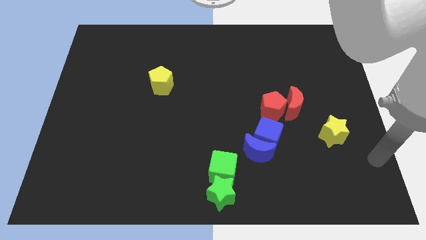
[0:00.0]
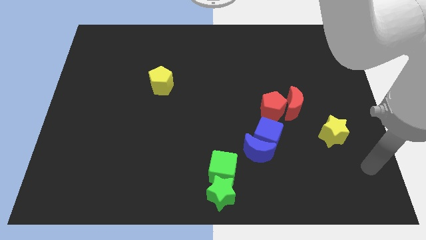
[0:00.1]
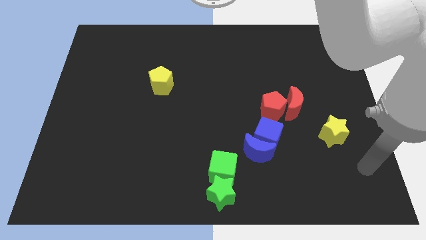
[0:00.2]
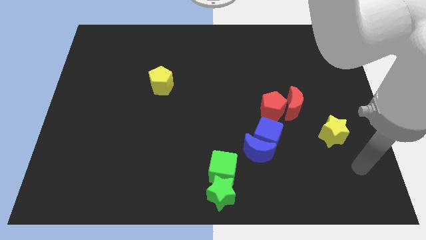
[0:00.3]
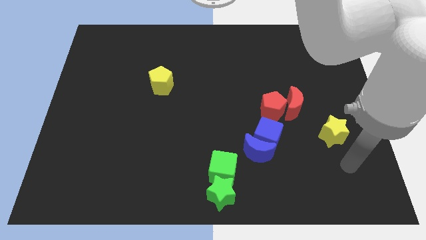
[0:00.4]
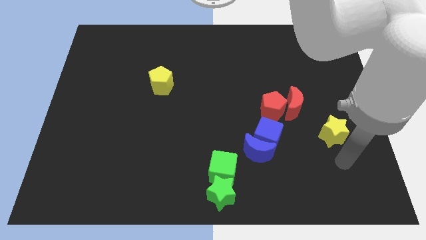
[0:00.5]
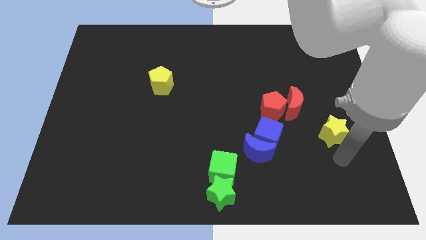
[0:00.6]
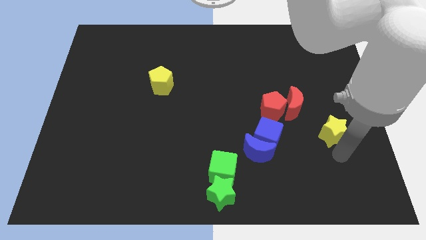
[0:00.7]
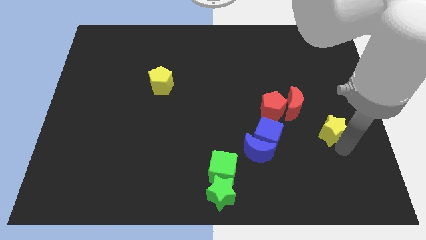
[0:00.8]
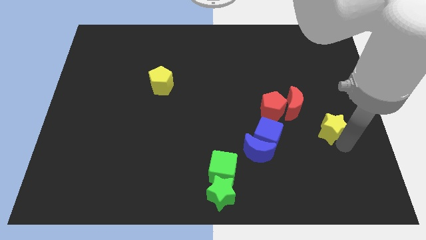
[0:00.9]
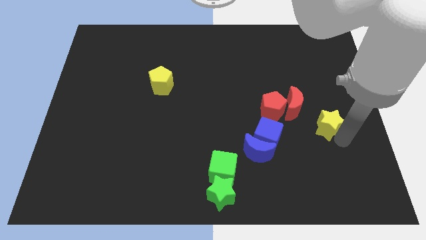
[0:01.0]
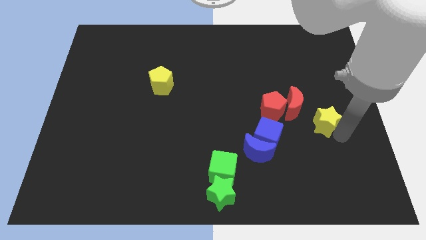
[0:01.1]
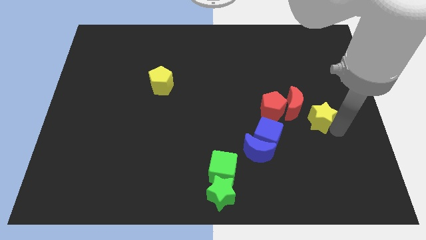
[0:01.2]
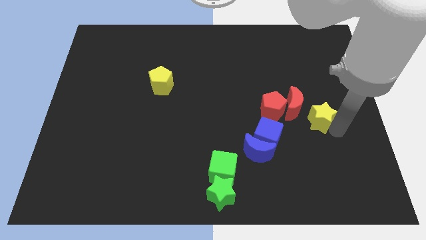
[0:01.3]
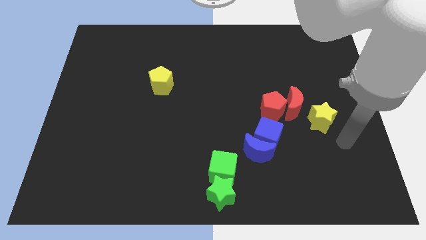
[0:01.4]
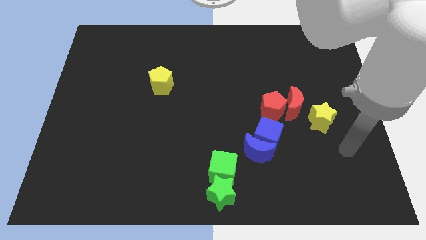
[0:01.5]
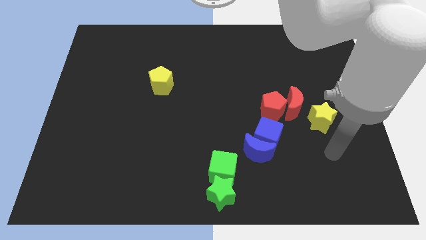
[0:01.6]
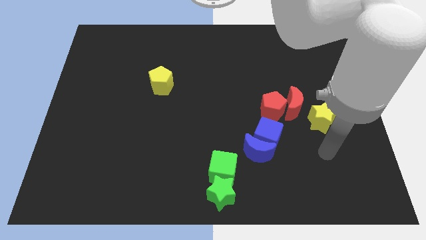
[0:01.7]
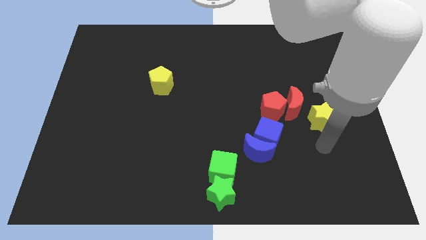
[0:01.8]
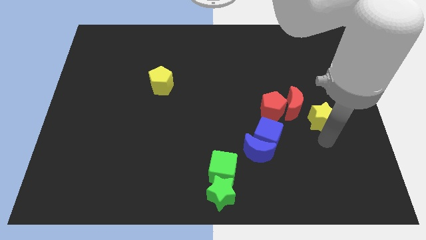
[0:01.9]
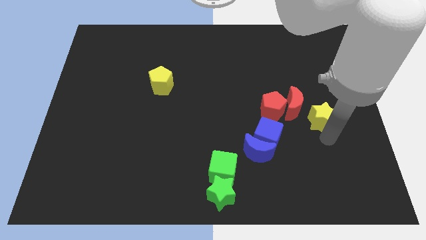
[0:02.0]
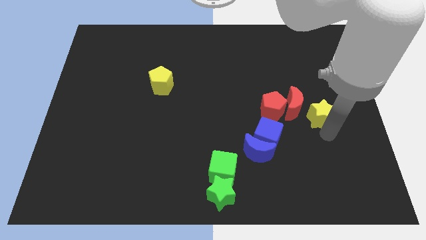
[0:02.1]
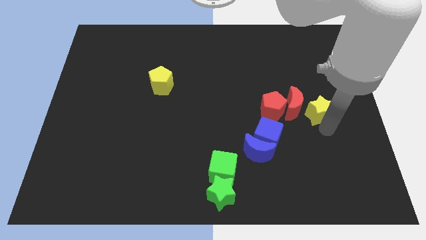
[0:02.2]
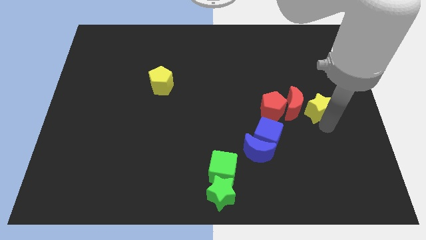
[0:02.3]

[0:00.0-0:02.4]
push the yellow star close to the red crescent

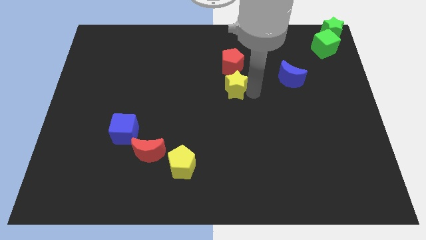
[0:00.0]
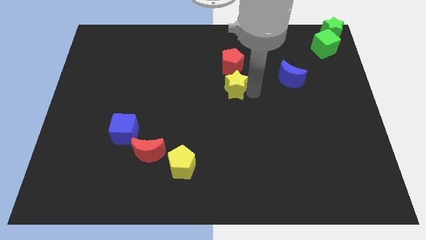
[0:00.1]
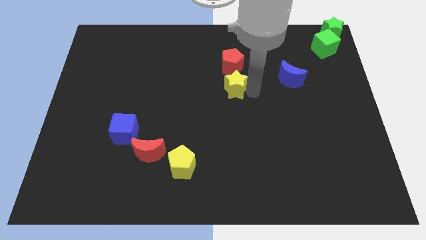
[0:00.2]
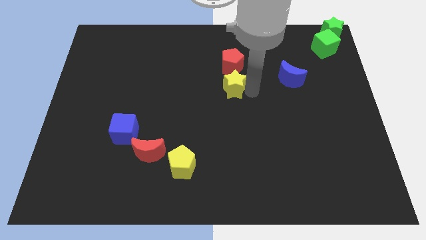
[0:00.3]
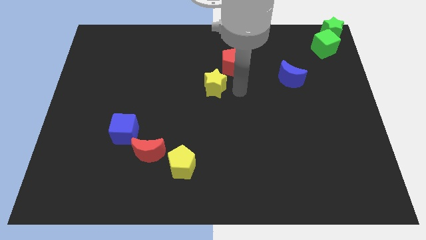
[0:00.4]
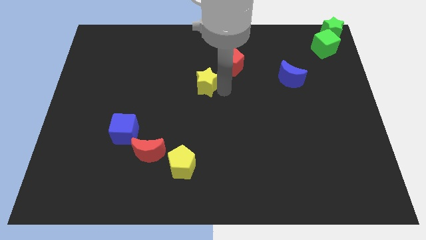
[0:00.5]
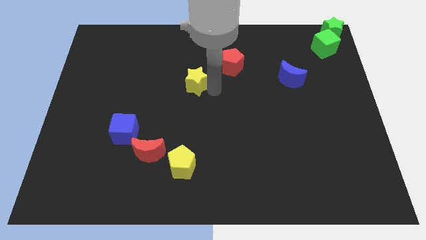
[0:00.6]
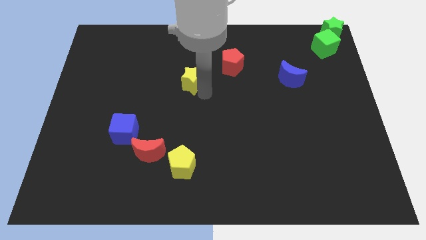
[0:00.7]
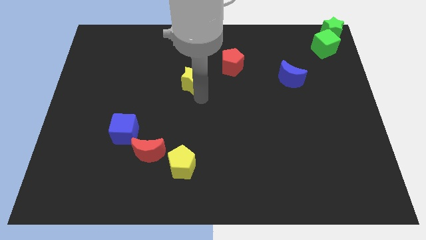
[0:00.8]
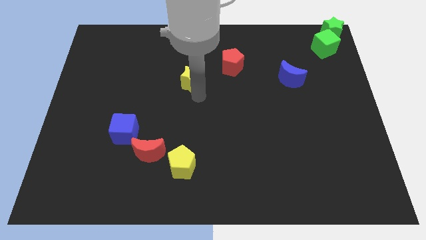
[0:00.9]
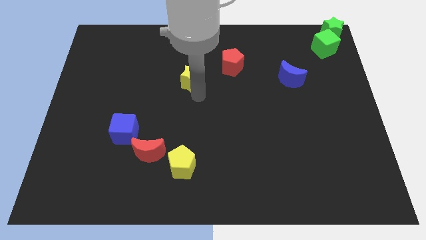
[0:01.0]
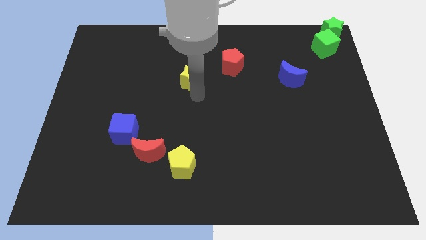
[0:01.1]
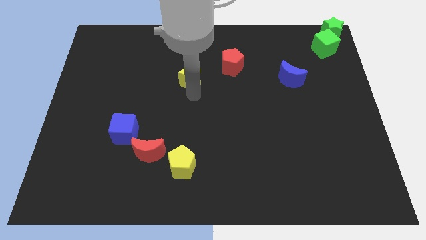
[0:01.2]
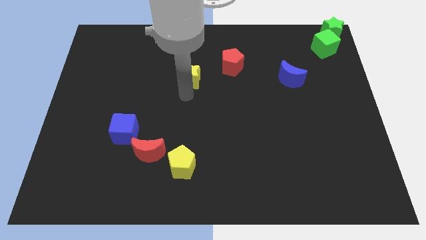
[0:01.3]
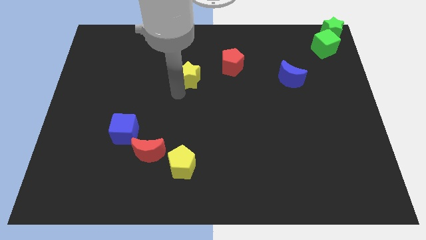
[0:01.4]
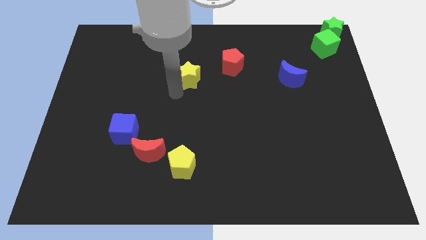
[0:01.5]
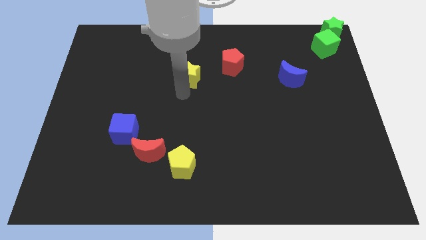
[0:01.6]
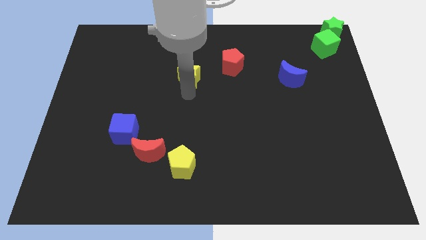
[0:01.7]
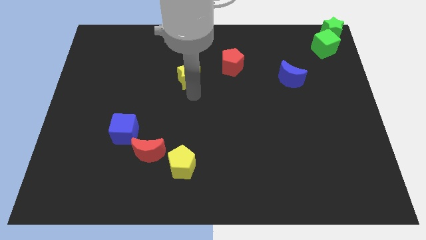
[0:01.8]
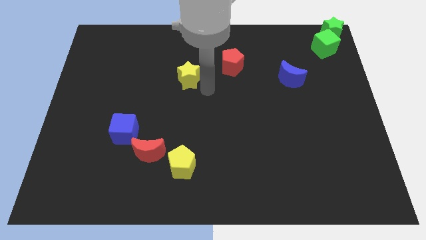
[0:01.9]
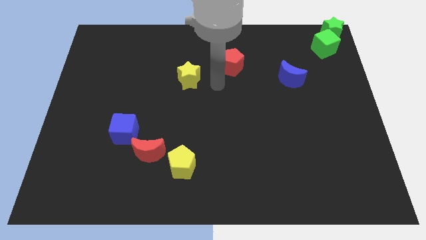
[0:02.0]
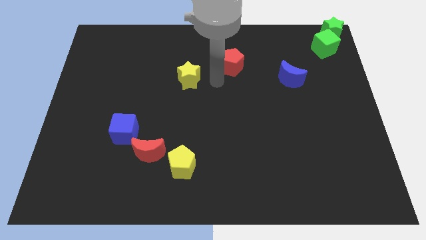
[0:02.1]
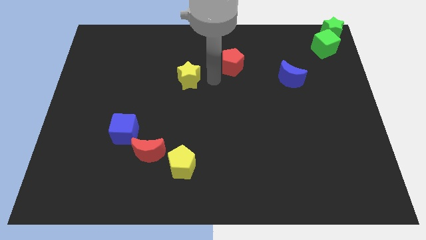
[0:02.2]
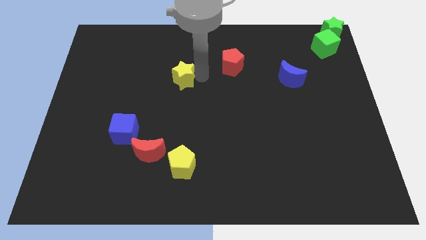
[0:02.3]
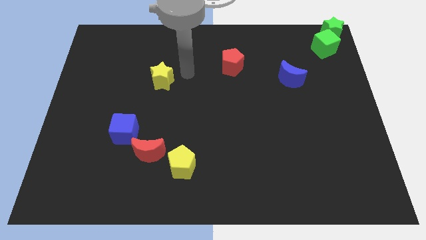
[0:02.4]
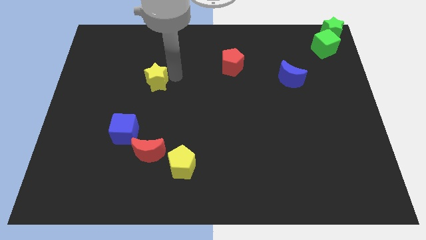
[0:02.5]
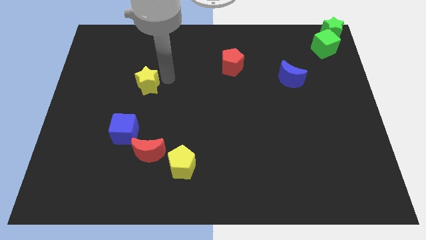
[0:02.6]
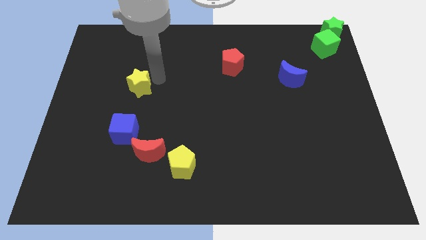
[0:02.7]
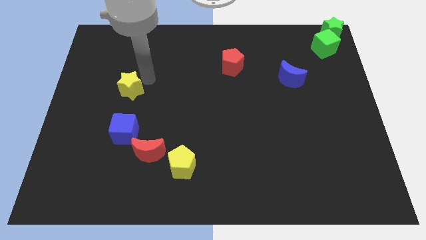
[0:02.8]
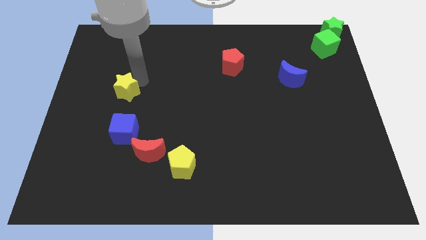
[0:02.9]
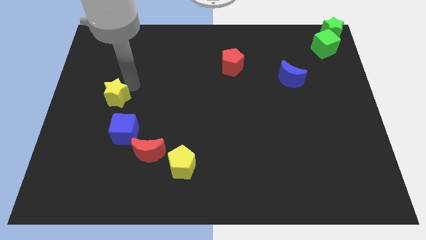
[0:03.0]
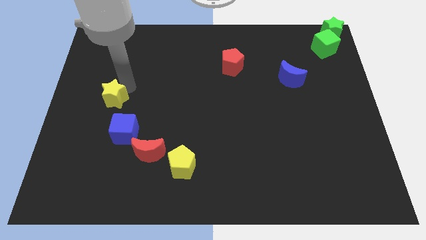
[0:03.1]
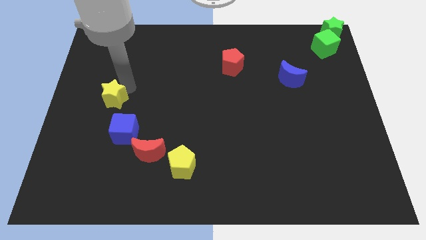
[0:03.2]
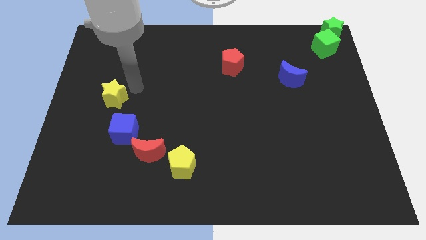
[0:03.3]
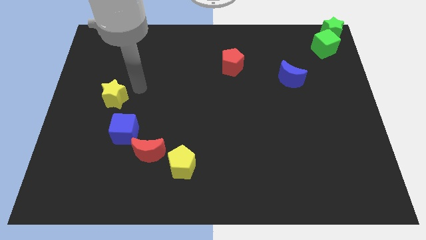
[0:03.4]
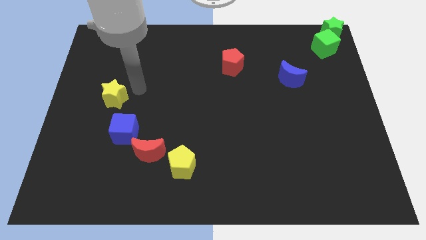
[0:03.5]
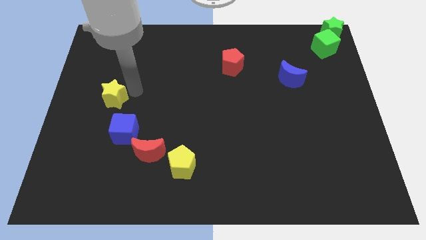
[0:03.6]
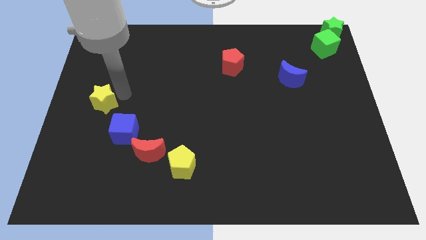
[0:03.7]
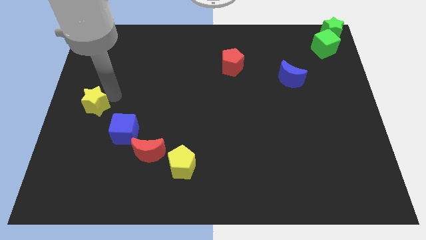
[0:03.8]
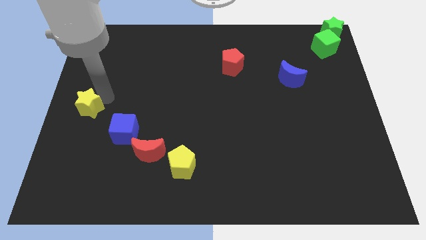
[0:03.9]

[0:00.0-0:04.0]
move the yellow star left center to the board

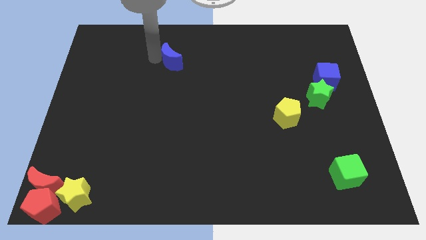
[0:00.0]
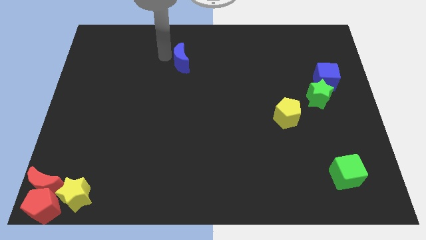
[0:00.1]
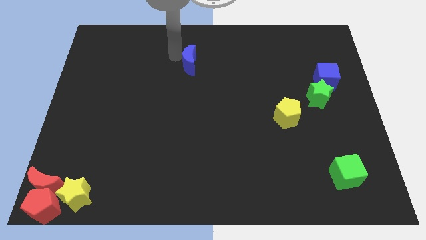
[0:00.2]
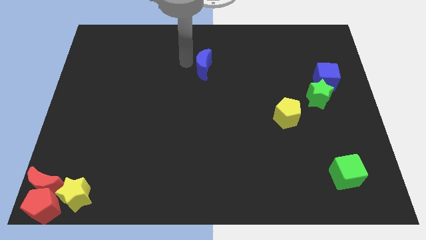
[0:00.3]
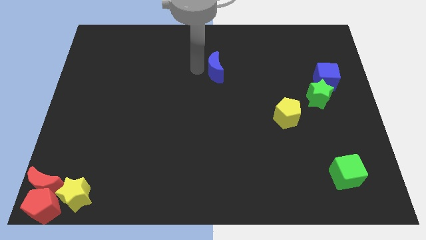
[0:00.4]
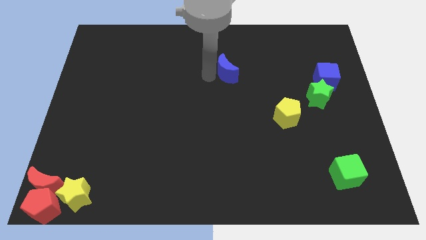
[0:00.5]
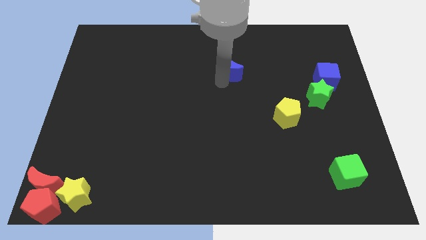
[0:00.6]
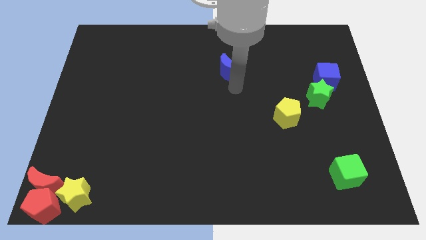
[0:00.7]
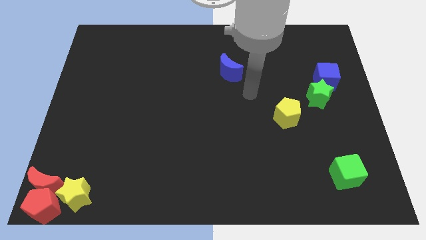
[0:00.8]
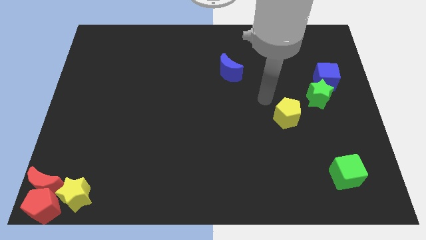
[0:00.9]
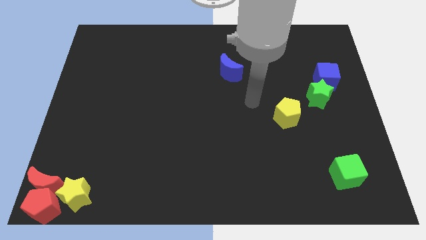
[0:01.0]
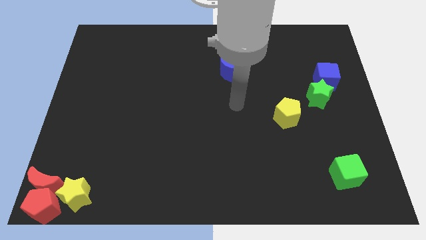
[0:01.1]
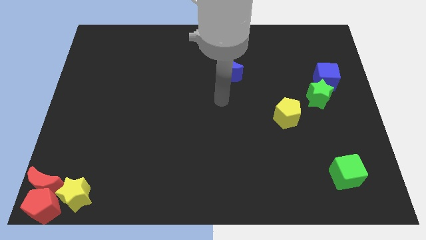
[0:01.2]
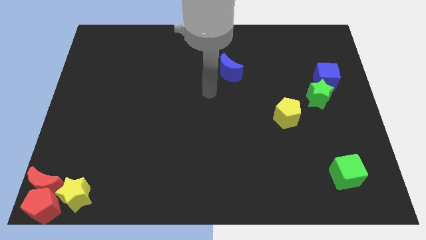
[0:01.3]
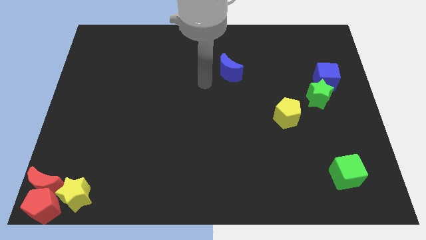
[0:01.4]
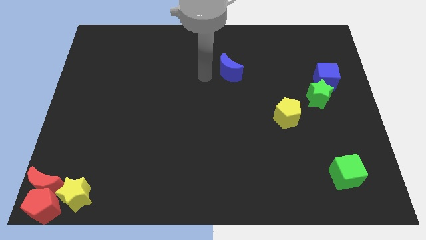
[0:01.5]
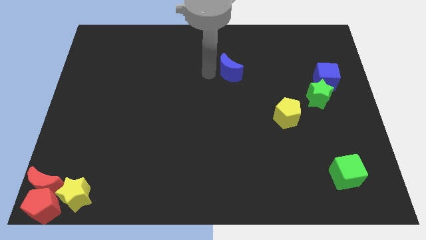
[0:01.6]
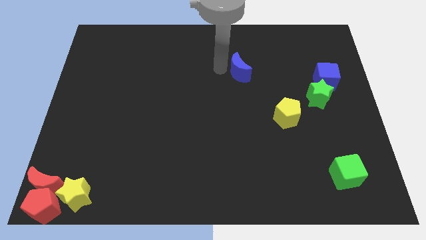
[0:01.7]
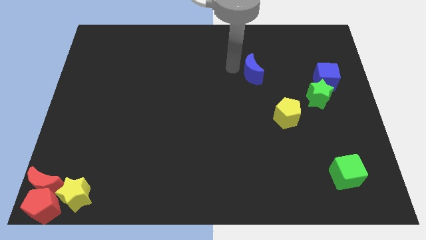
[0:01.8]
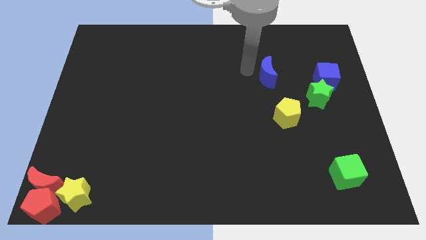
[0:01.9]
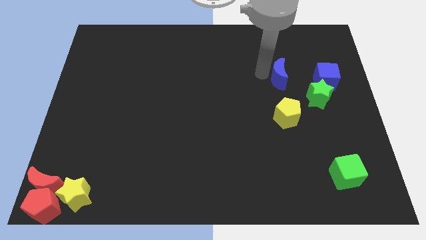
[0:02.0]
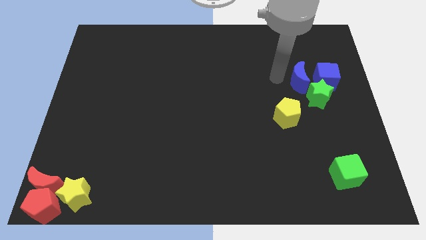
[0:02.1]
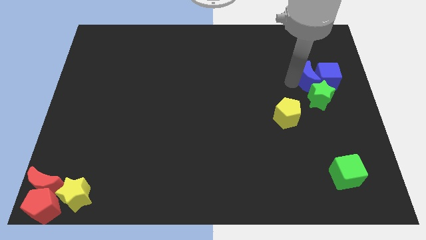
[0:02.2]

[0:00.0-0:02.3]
place blue crescent above green star

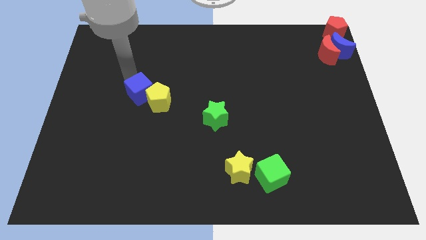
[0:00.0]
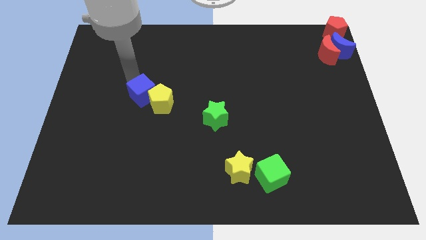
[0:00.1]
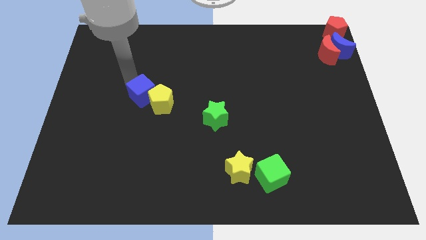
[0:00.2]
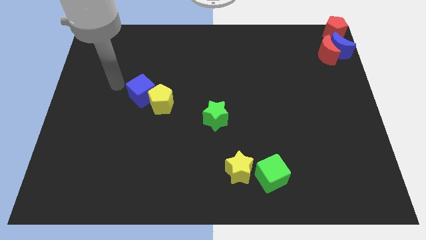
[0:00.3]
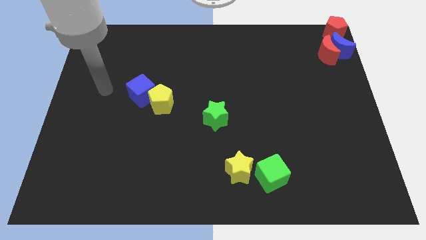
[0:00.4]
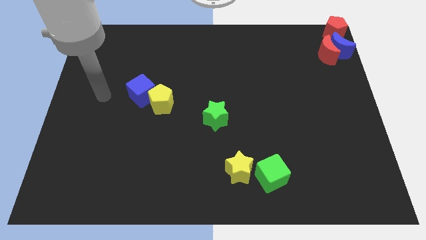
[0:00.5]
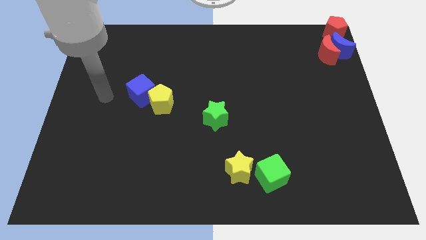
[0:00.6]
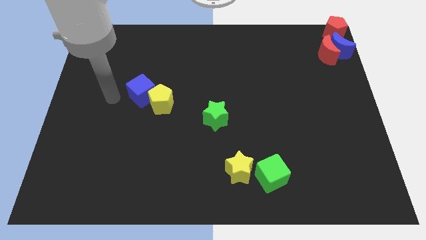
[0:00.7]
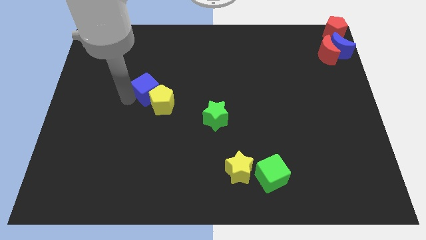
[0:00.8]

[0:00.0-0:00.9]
place your arm at the left side of the blue cube
